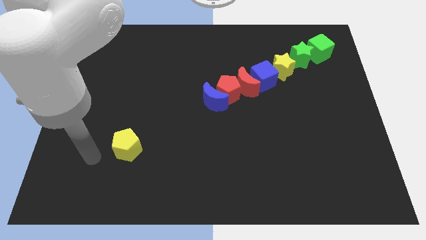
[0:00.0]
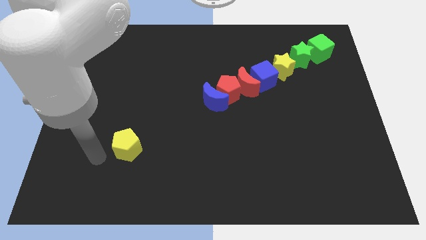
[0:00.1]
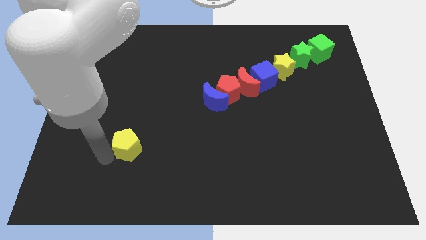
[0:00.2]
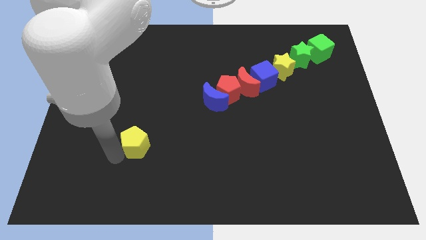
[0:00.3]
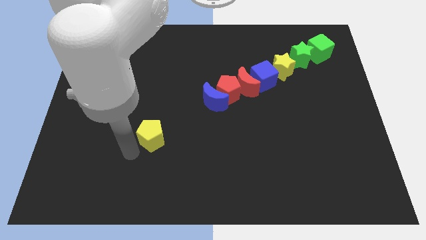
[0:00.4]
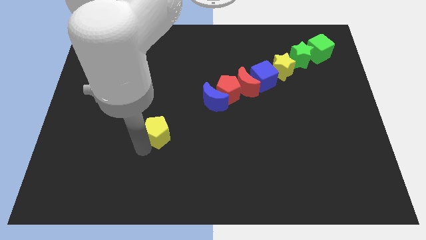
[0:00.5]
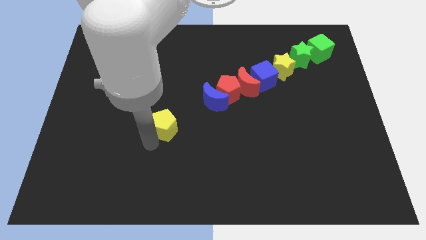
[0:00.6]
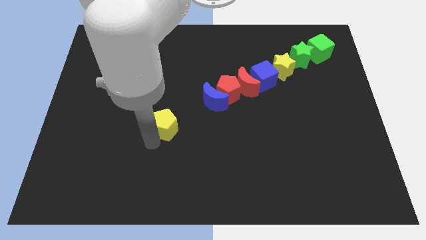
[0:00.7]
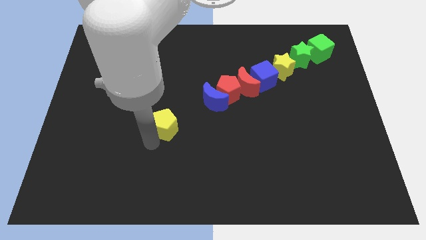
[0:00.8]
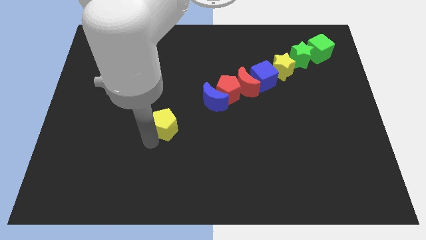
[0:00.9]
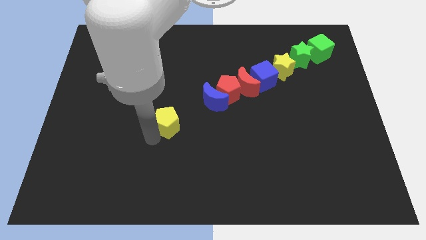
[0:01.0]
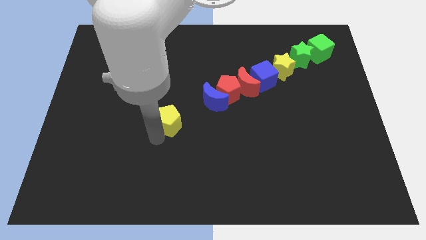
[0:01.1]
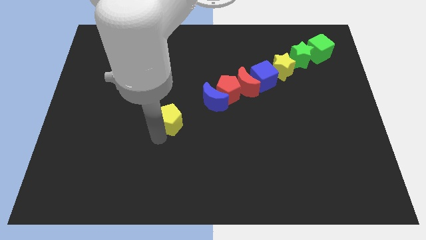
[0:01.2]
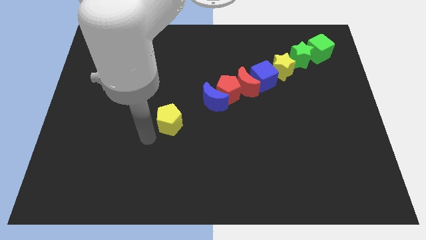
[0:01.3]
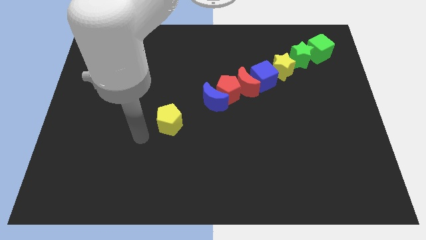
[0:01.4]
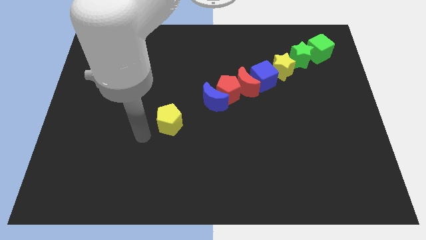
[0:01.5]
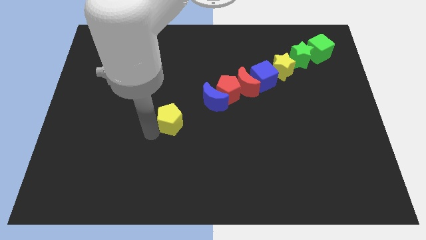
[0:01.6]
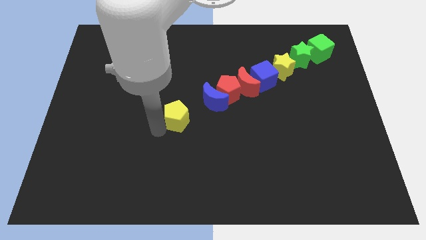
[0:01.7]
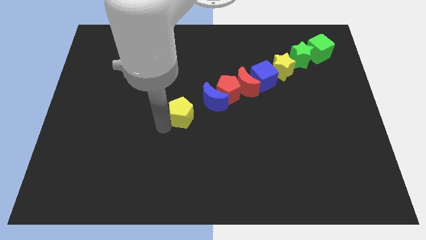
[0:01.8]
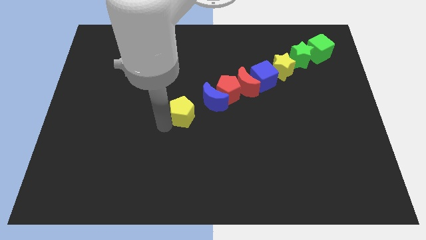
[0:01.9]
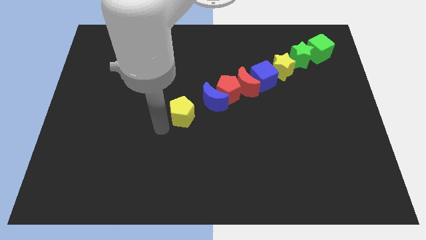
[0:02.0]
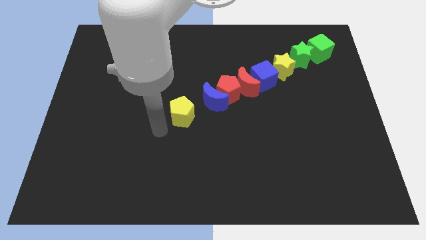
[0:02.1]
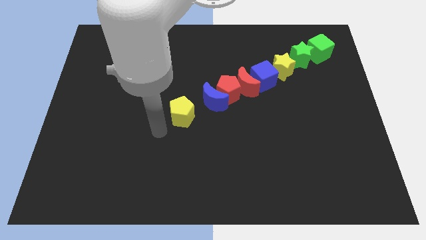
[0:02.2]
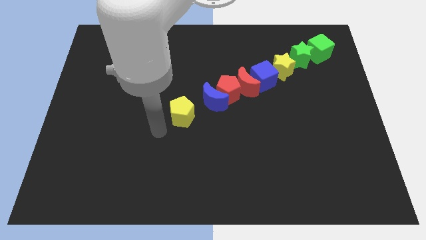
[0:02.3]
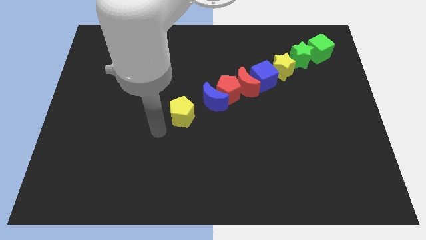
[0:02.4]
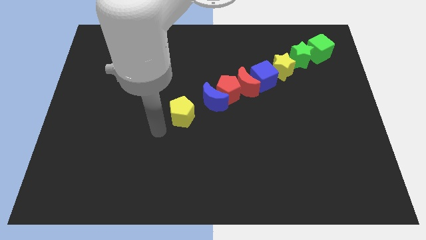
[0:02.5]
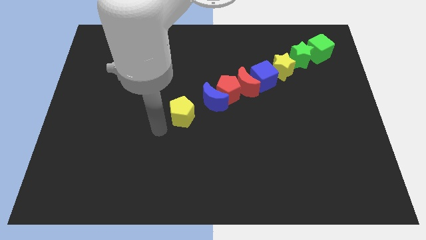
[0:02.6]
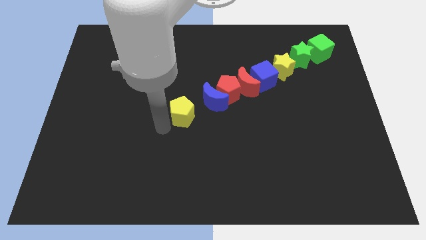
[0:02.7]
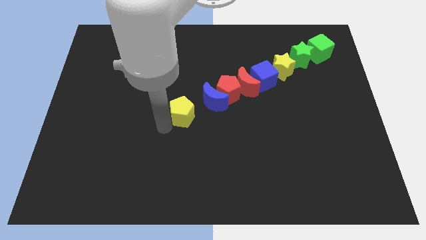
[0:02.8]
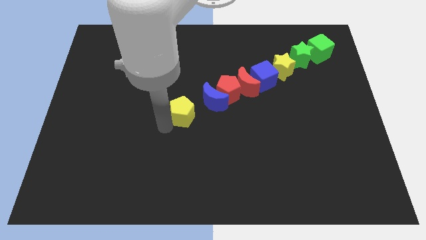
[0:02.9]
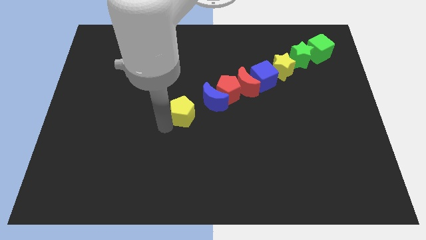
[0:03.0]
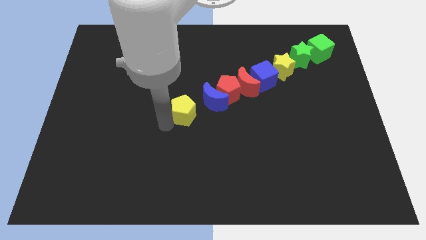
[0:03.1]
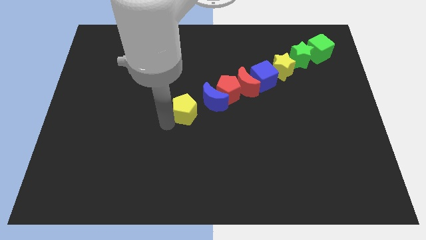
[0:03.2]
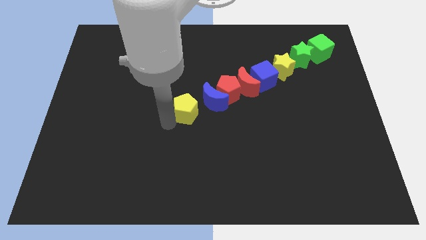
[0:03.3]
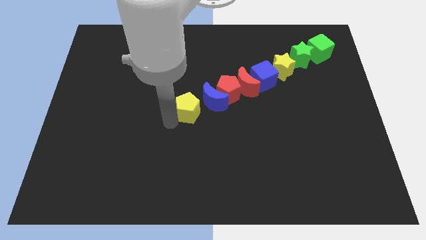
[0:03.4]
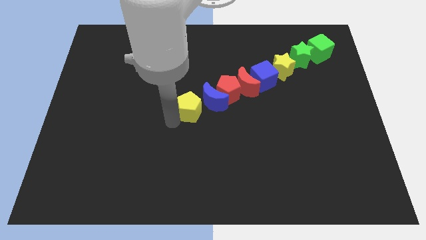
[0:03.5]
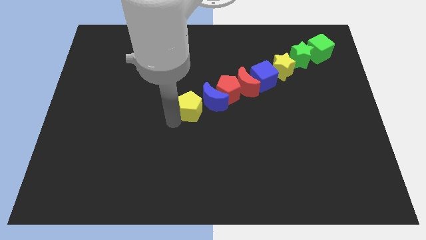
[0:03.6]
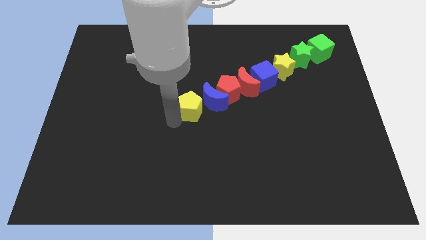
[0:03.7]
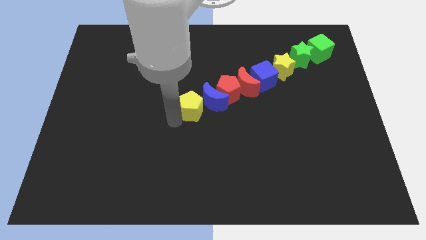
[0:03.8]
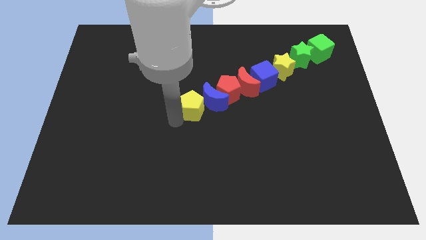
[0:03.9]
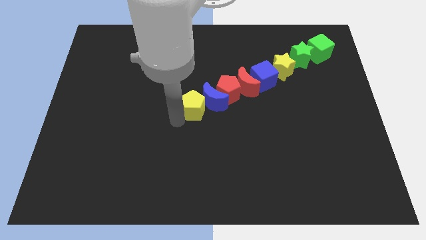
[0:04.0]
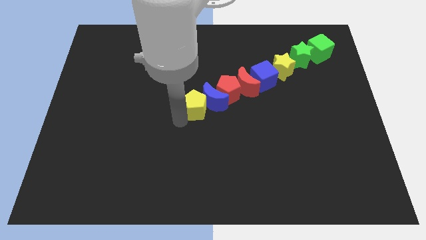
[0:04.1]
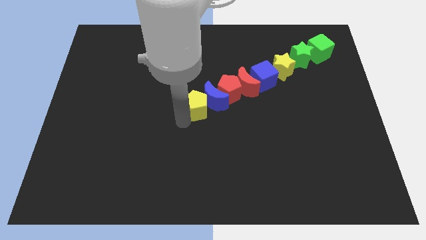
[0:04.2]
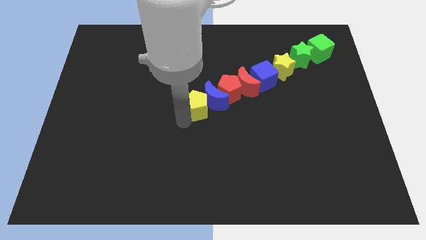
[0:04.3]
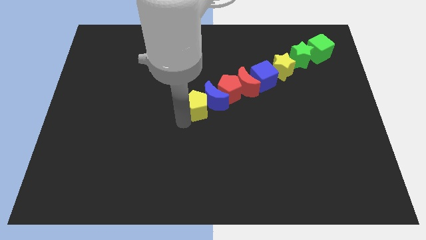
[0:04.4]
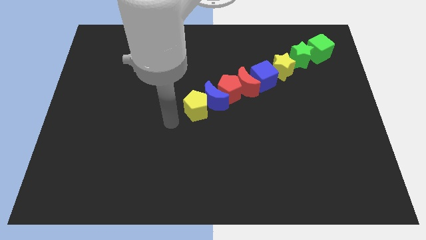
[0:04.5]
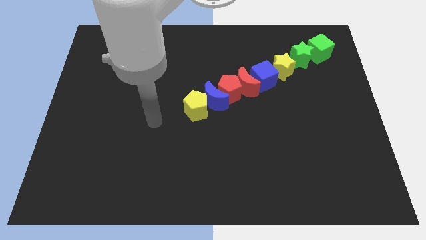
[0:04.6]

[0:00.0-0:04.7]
push the yellow pentagon to the bottom of the blue crescent

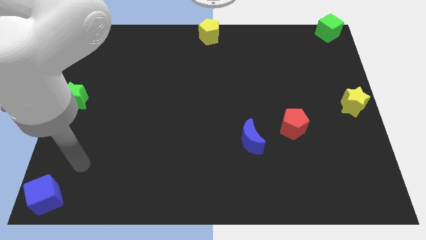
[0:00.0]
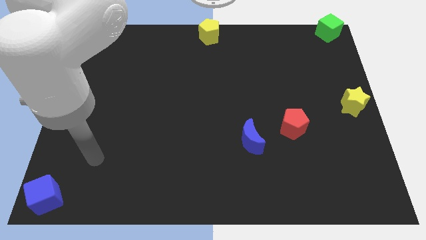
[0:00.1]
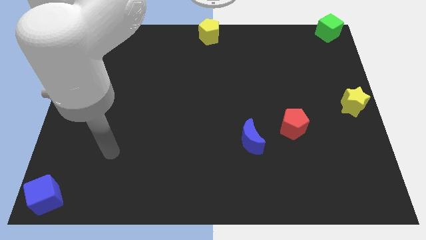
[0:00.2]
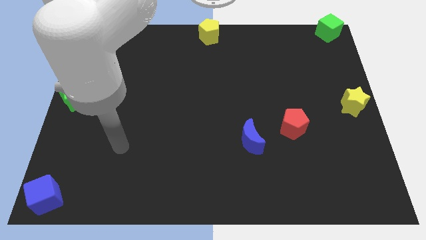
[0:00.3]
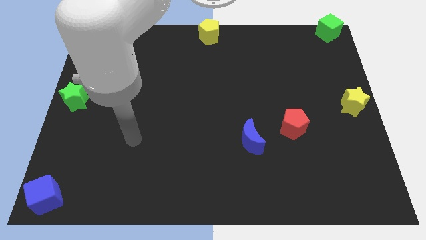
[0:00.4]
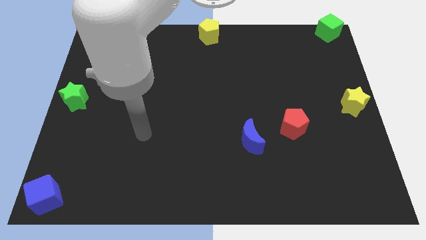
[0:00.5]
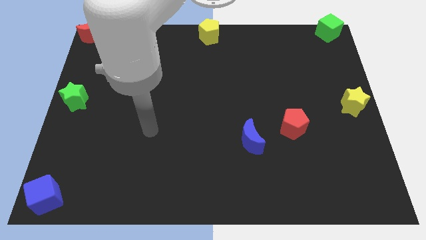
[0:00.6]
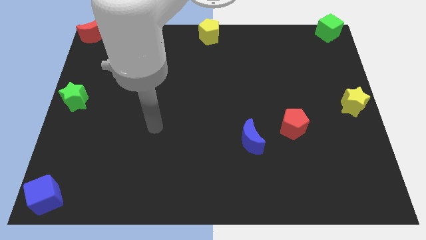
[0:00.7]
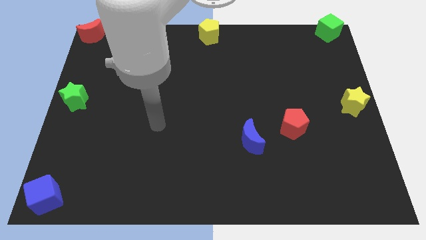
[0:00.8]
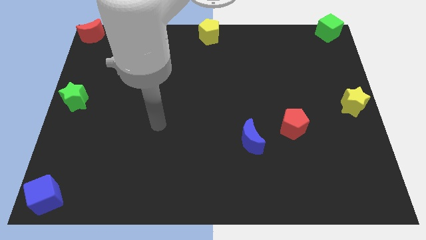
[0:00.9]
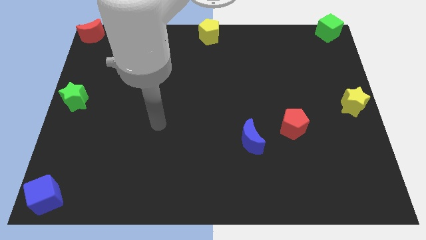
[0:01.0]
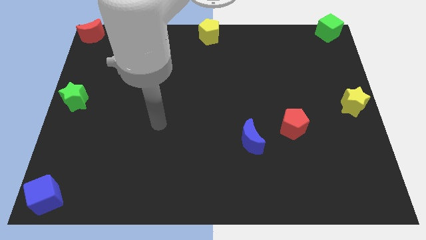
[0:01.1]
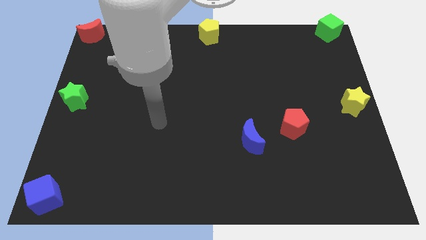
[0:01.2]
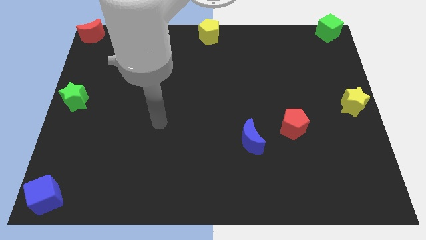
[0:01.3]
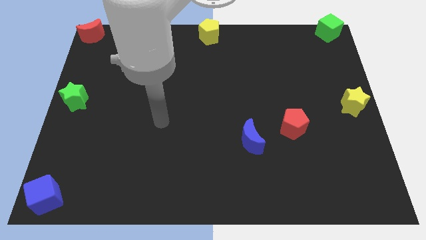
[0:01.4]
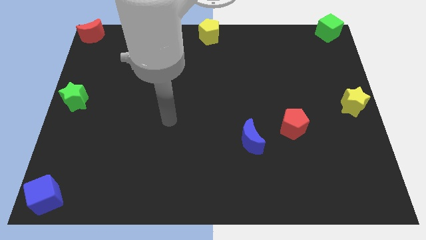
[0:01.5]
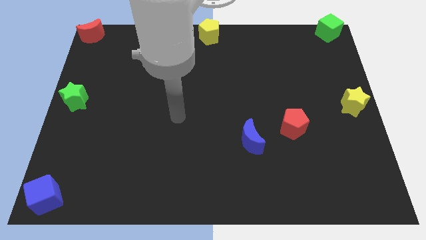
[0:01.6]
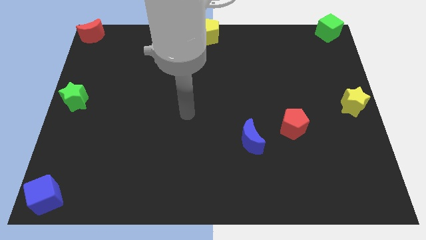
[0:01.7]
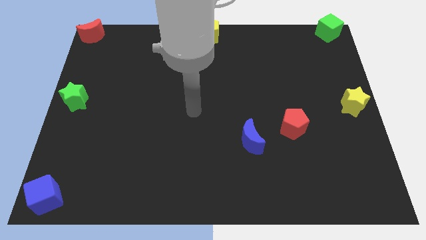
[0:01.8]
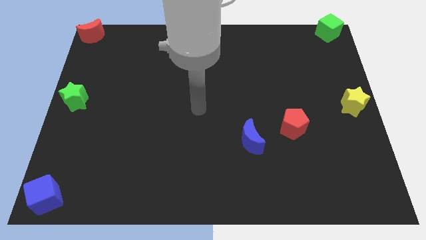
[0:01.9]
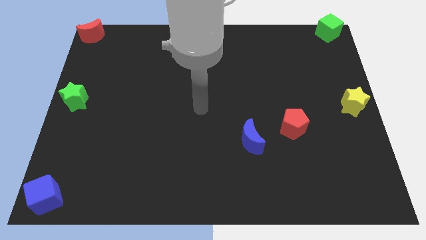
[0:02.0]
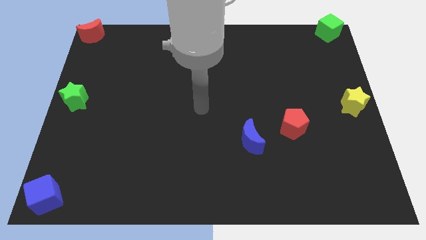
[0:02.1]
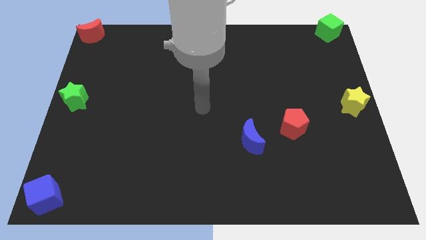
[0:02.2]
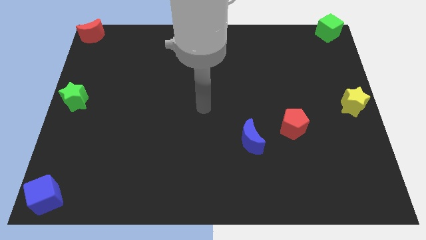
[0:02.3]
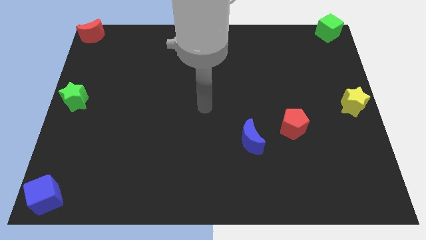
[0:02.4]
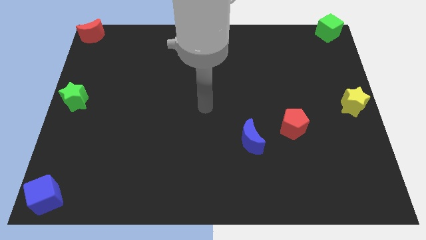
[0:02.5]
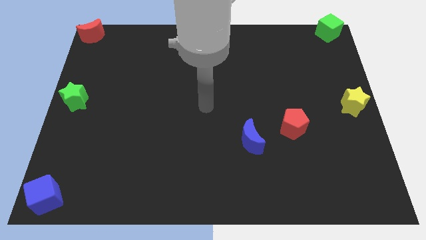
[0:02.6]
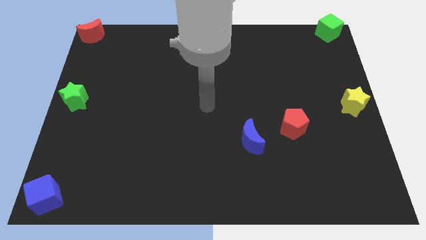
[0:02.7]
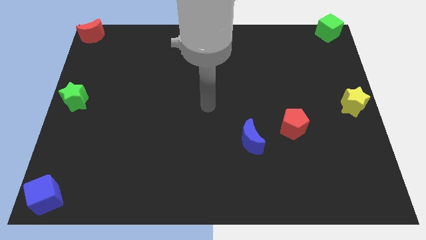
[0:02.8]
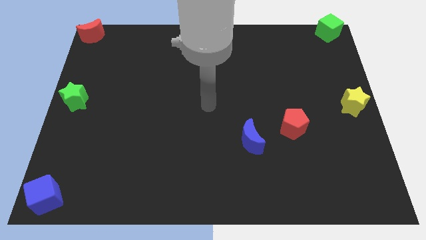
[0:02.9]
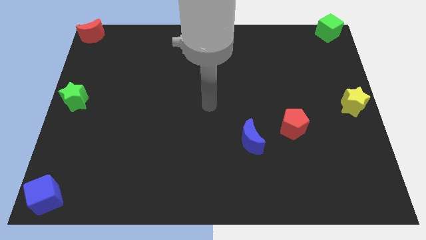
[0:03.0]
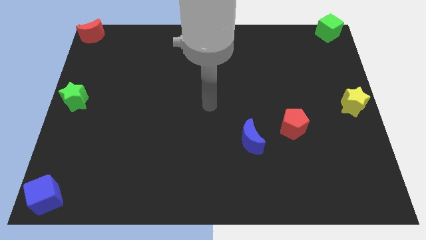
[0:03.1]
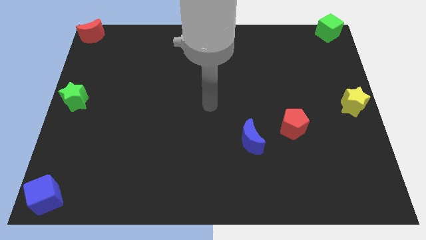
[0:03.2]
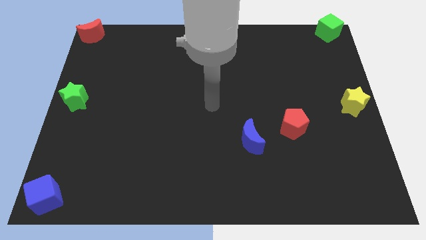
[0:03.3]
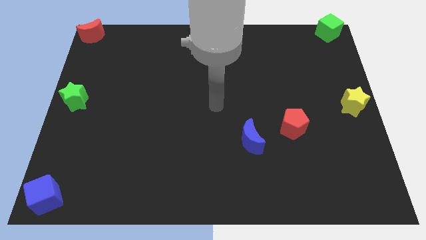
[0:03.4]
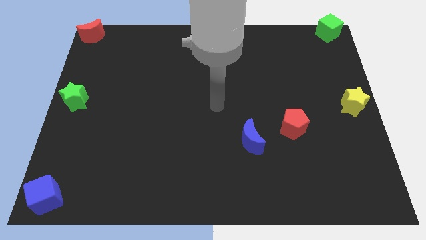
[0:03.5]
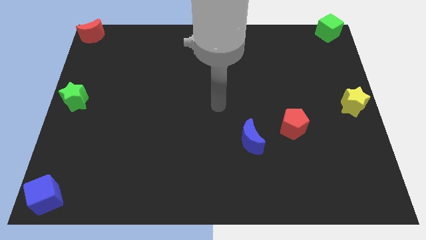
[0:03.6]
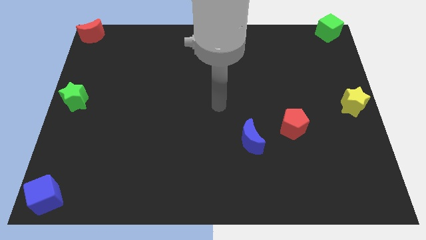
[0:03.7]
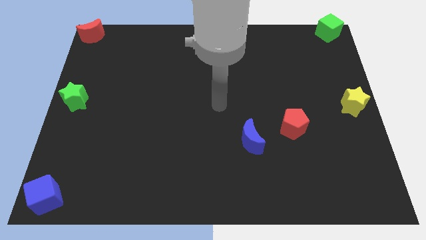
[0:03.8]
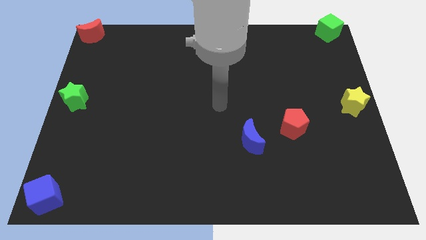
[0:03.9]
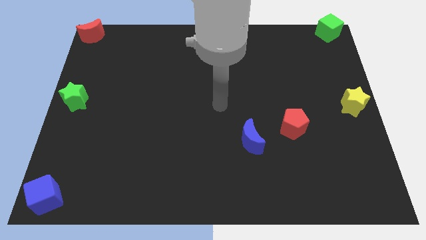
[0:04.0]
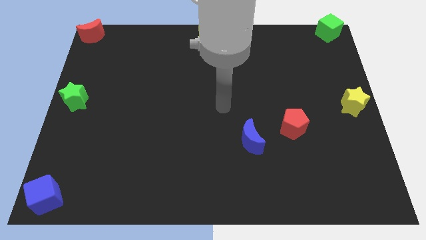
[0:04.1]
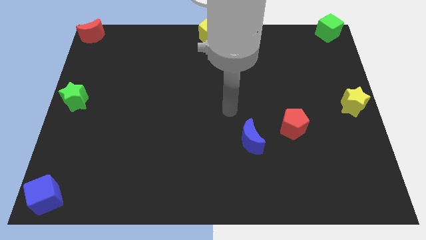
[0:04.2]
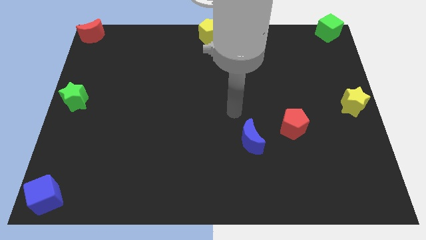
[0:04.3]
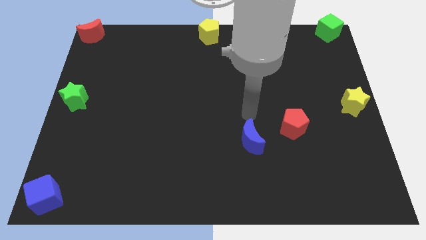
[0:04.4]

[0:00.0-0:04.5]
move your arm to the top of blue crescent
